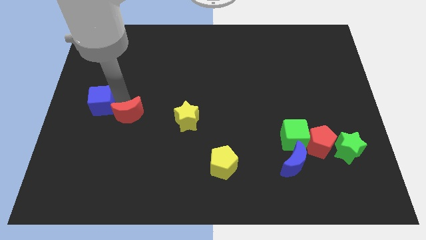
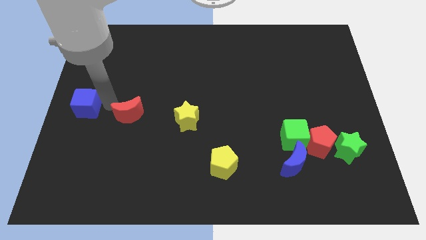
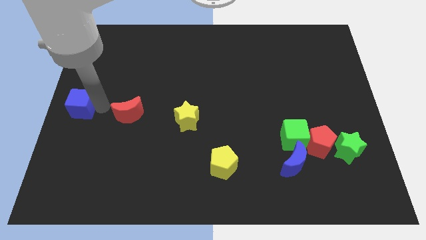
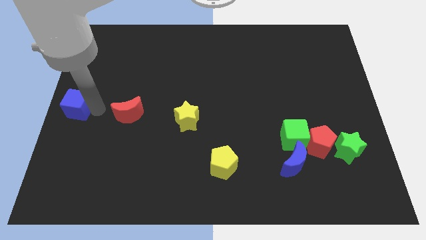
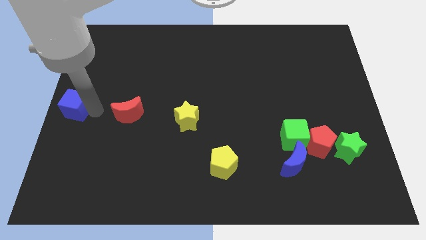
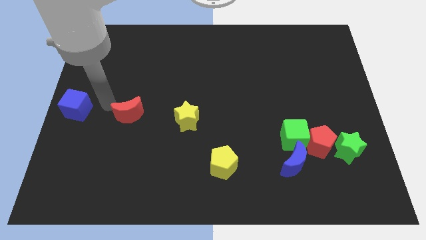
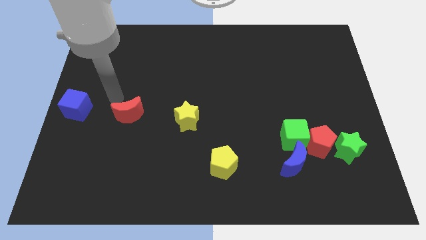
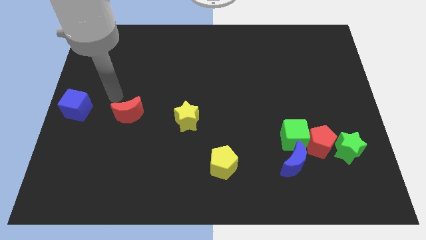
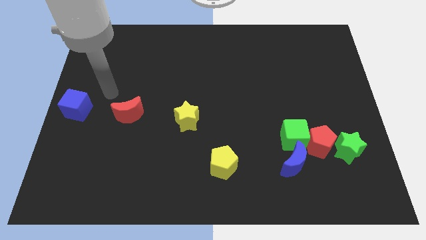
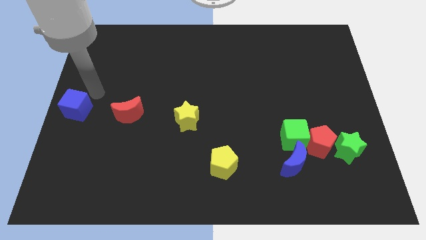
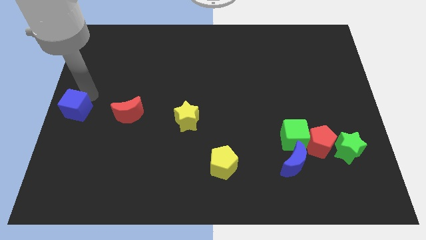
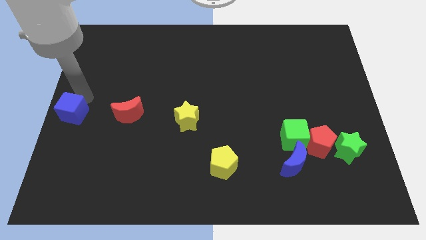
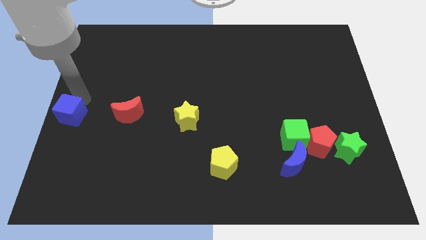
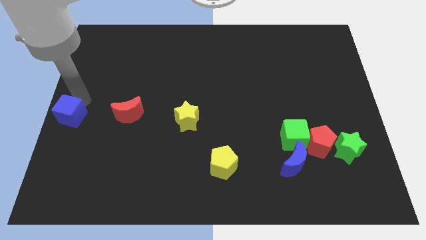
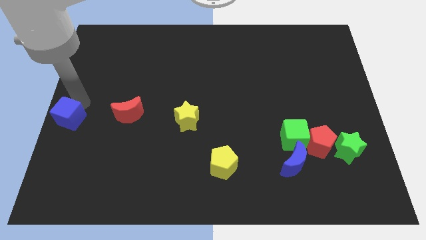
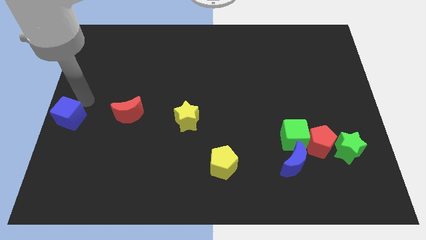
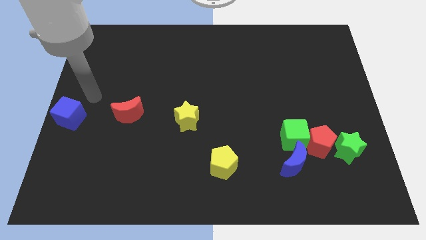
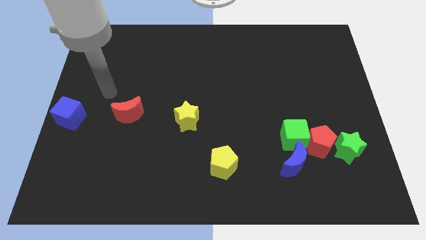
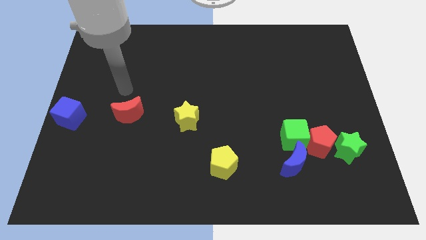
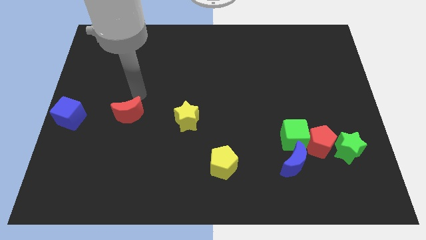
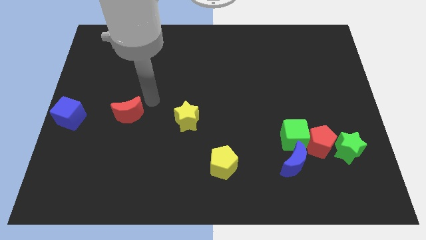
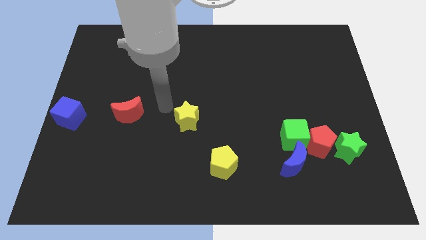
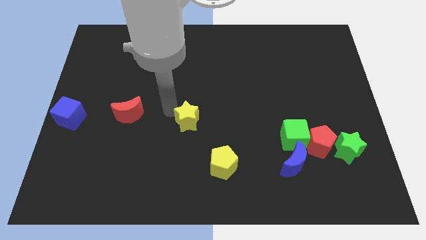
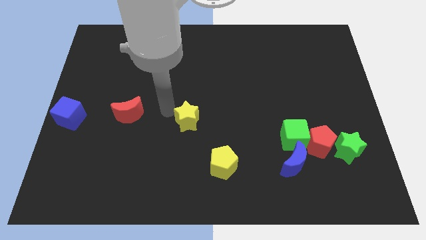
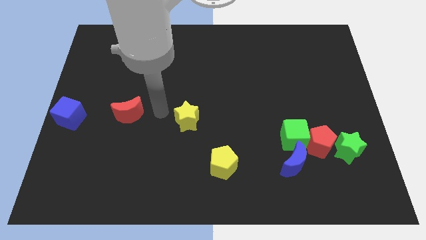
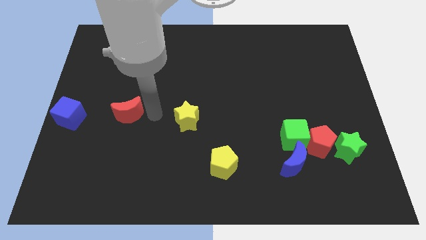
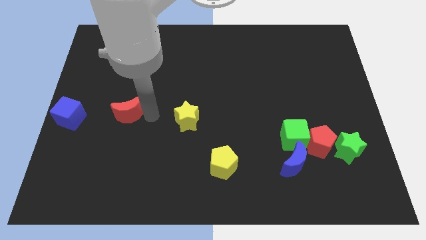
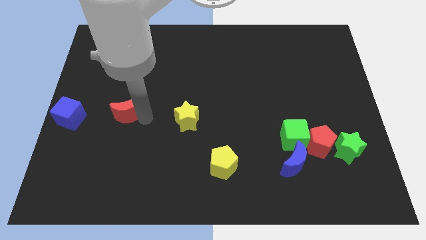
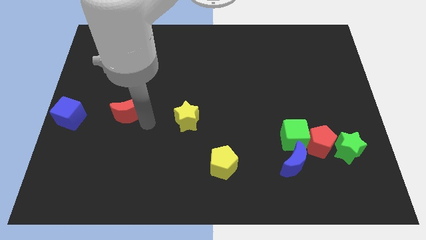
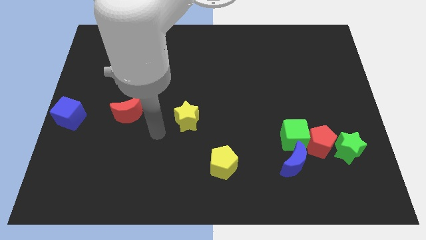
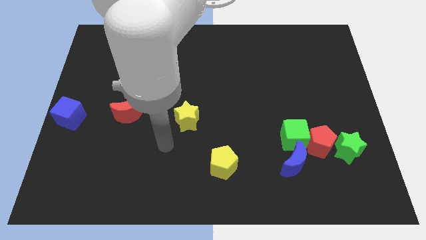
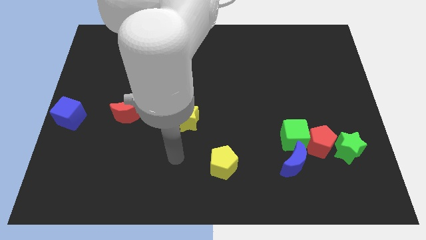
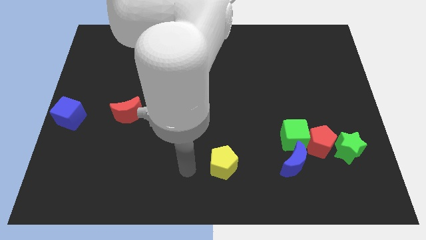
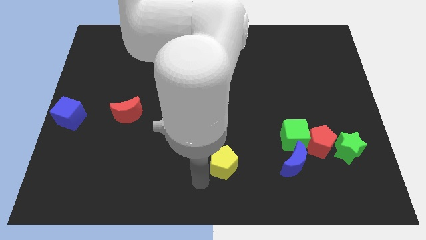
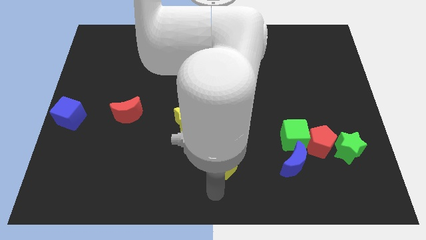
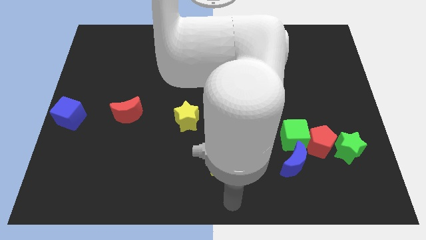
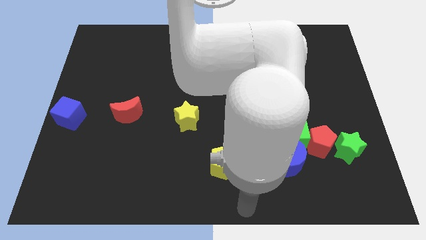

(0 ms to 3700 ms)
slide the blue cube to the left center of the board

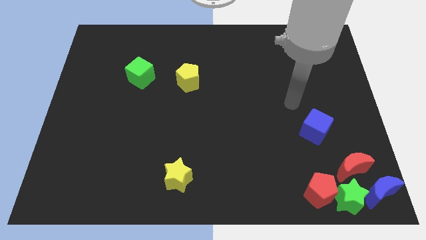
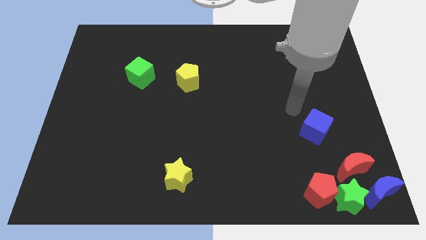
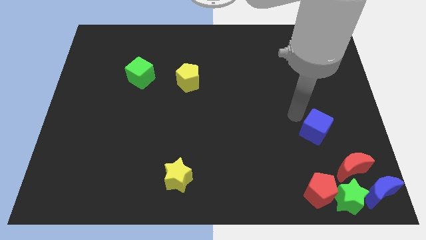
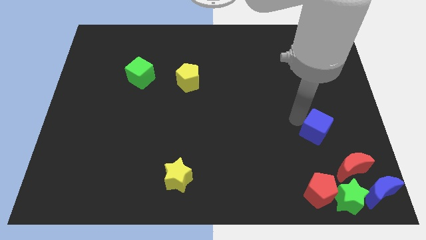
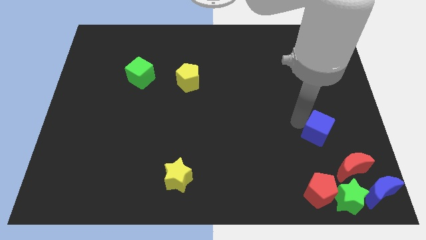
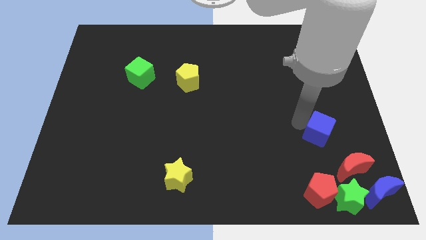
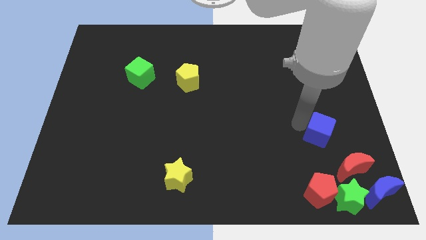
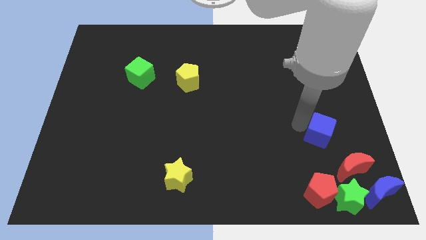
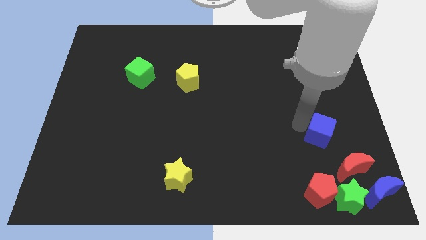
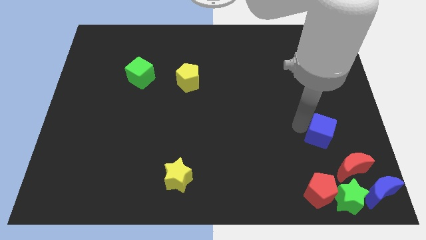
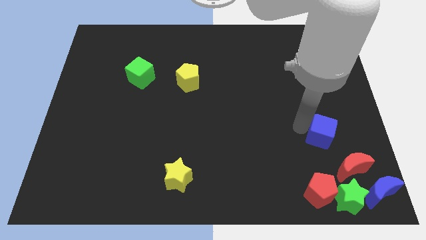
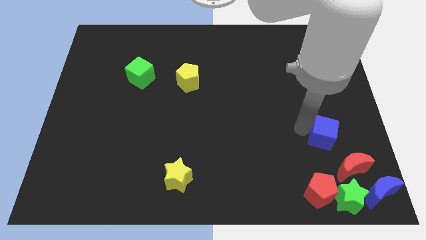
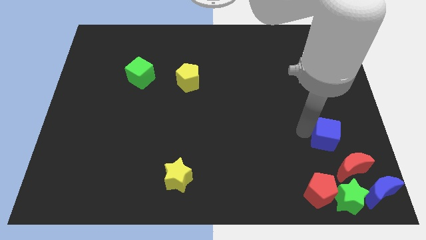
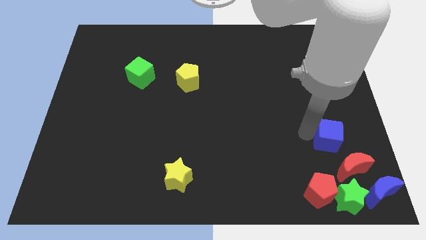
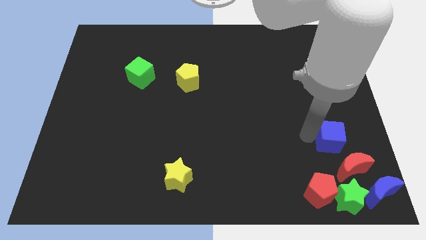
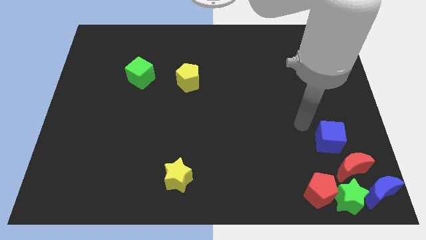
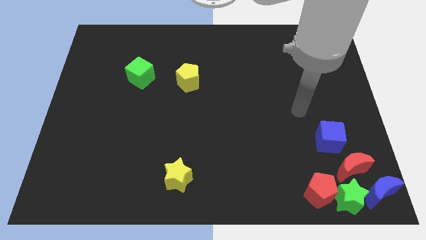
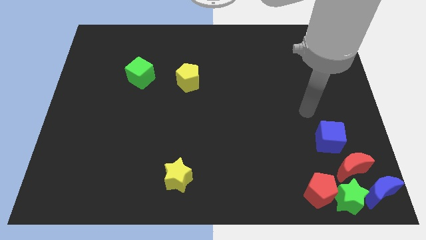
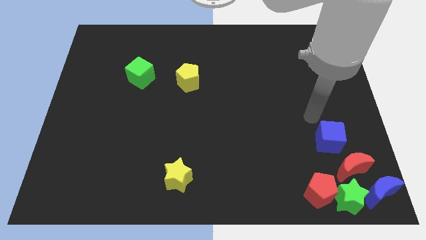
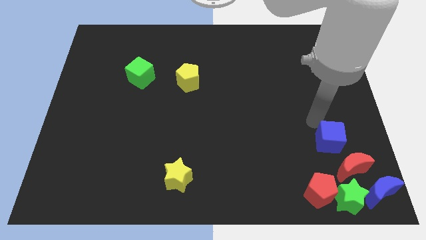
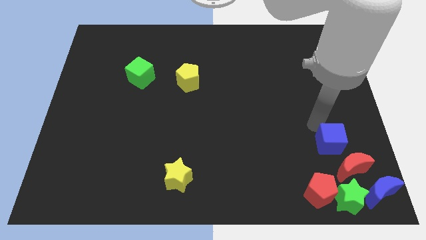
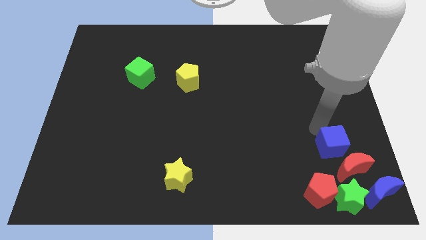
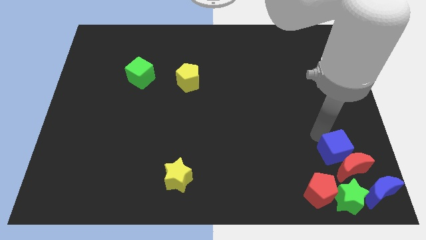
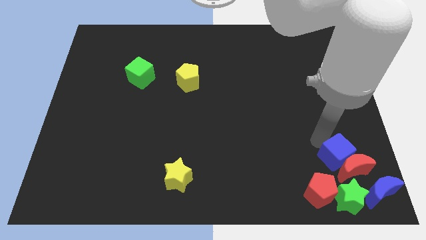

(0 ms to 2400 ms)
push the blue cube to the top of the red crescent

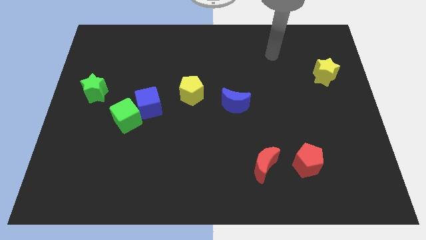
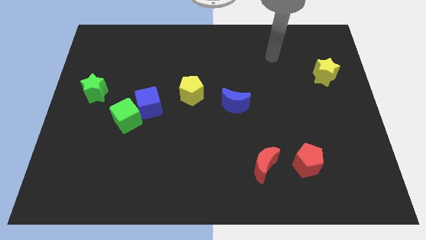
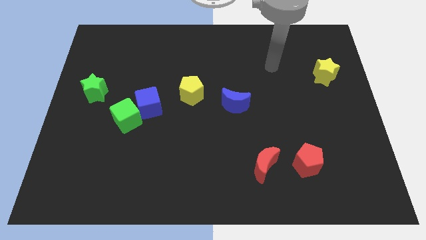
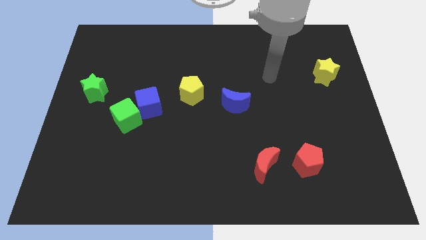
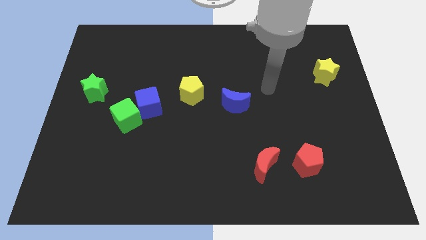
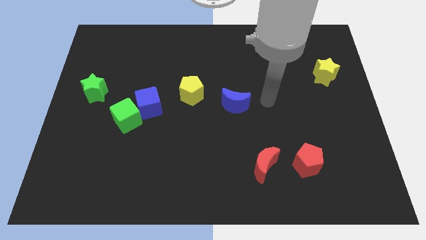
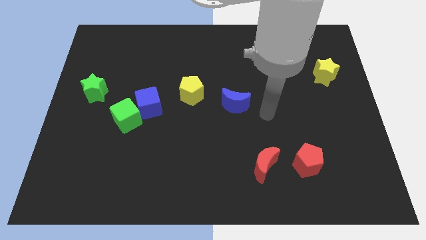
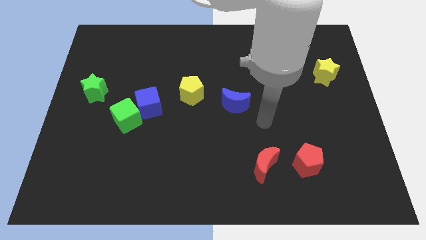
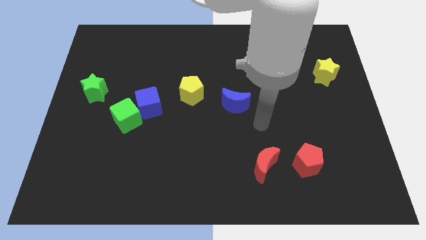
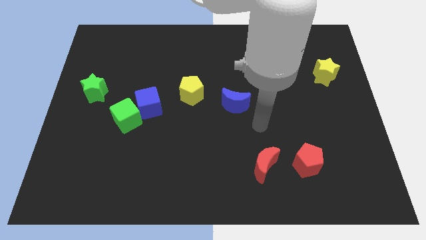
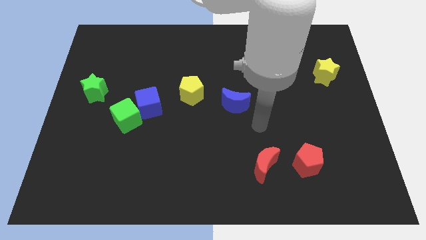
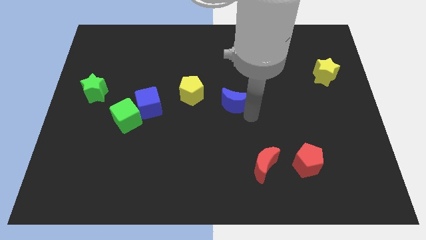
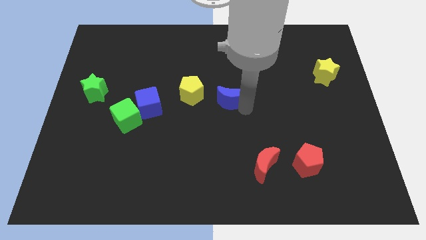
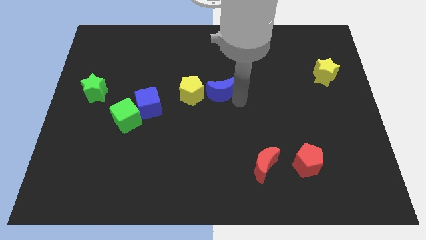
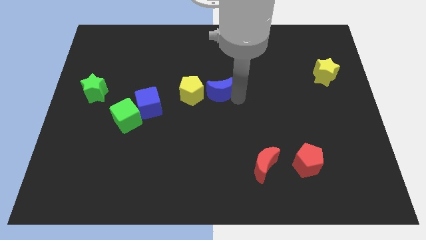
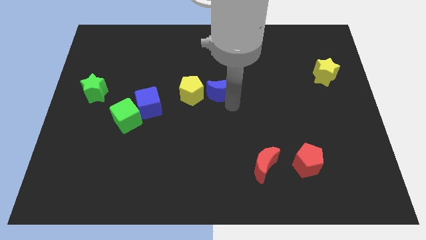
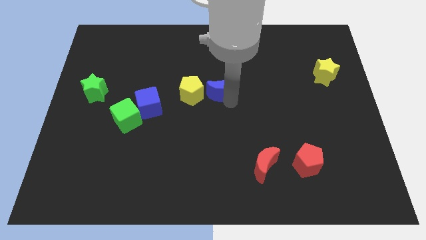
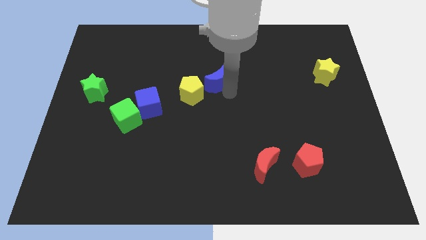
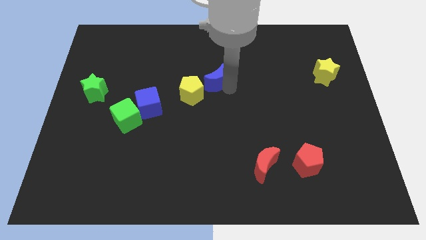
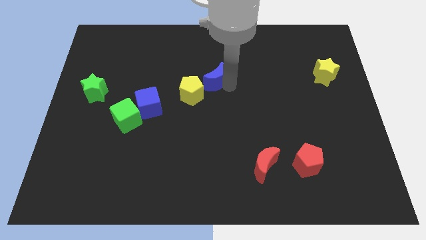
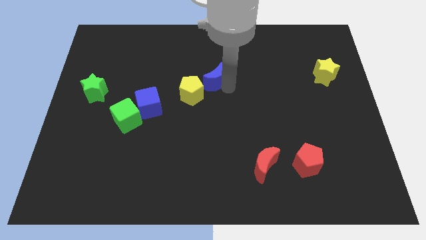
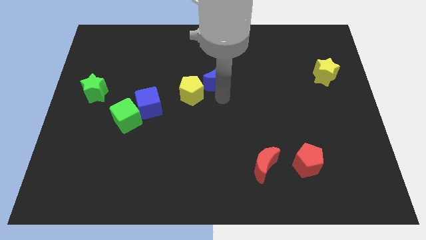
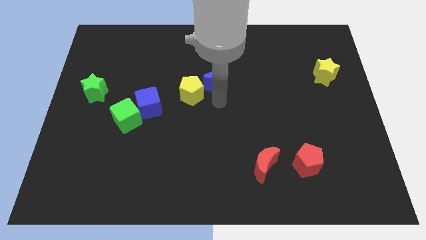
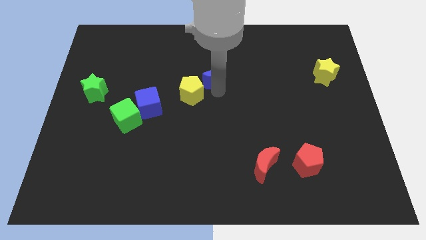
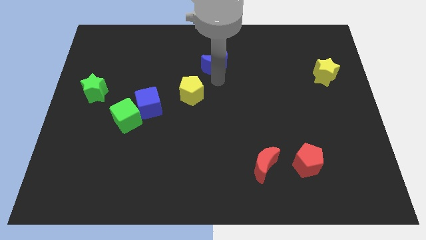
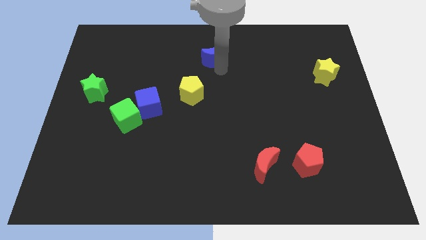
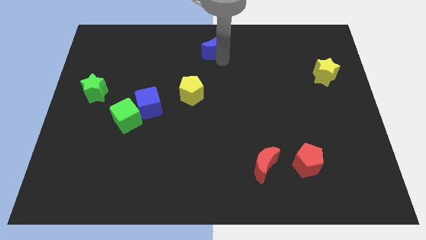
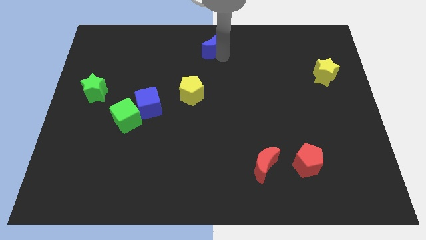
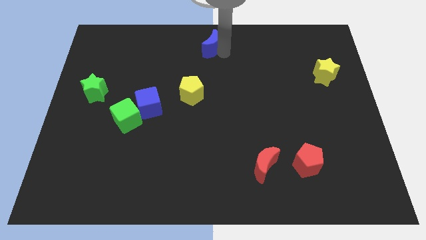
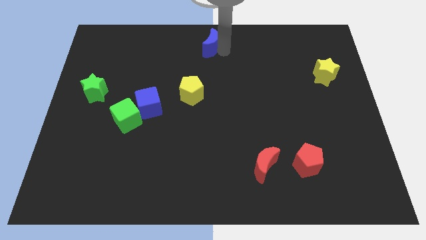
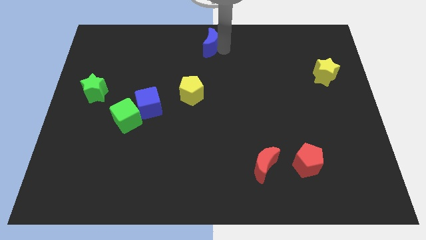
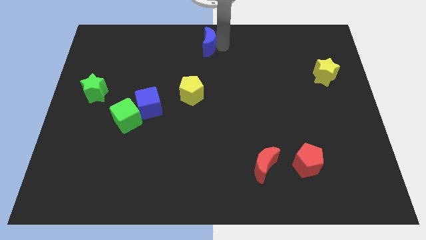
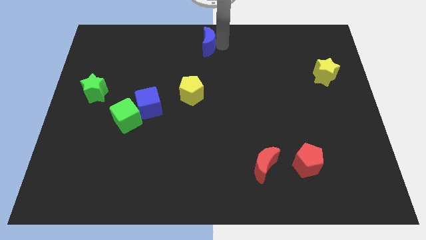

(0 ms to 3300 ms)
move blue moon to the top center
